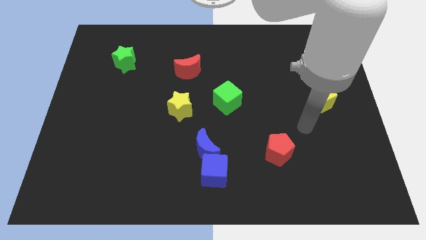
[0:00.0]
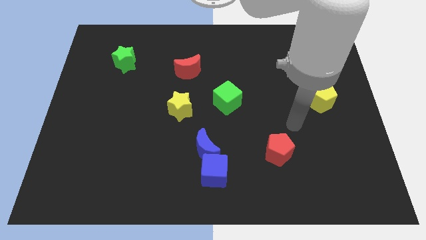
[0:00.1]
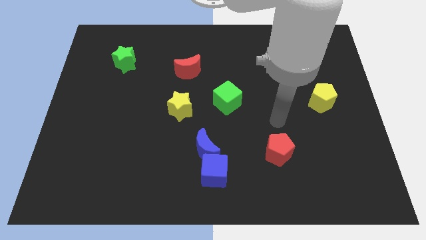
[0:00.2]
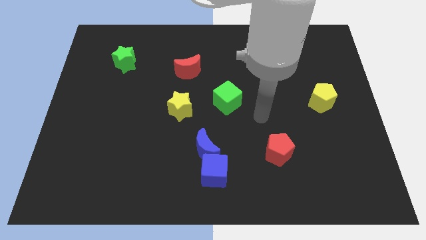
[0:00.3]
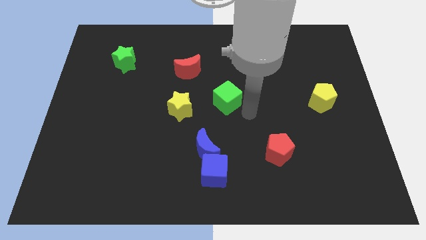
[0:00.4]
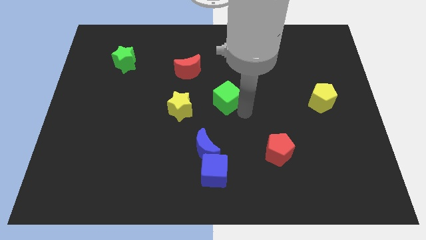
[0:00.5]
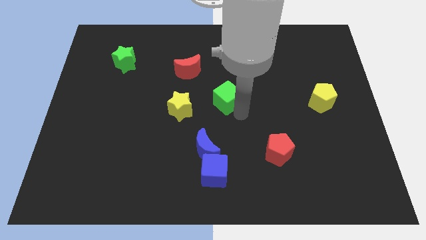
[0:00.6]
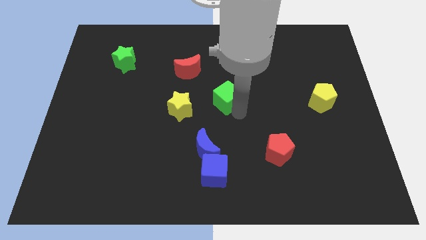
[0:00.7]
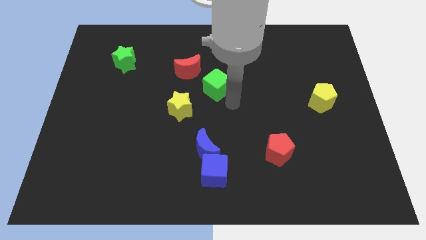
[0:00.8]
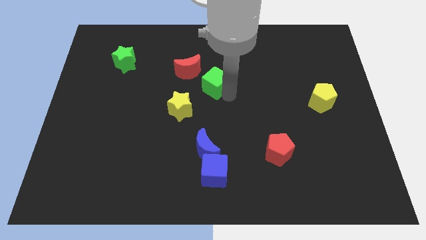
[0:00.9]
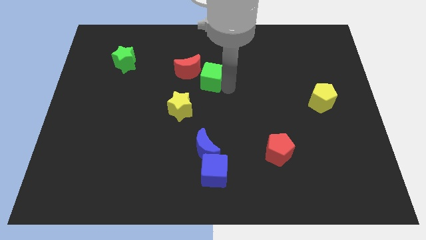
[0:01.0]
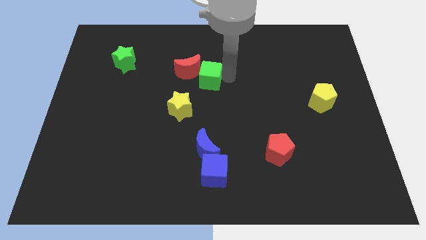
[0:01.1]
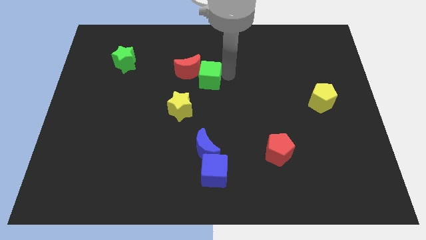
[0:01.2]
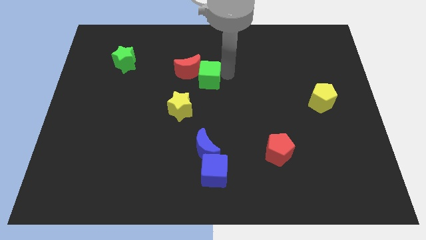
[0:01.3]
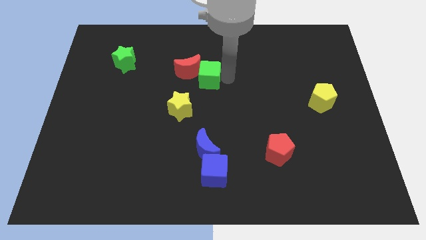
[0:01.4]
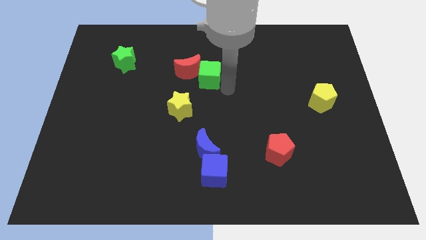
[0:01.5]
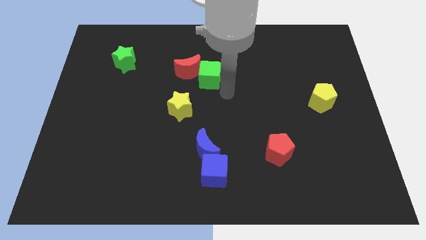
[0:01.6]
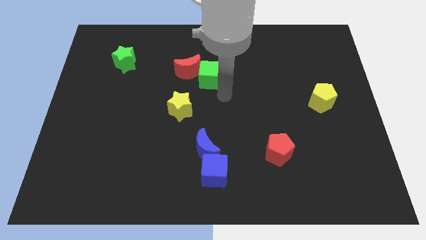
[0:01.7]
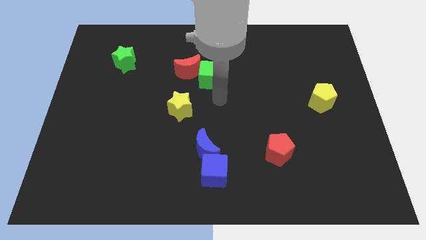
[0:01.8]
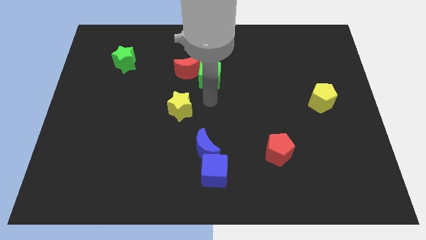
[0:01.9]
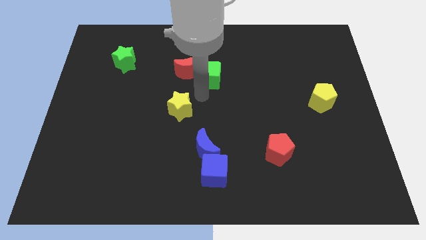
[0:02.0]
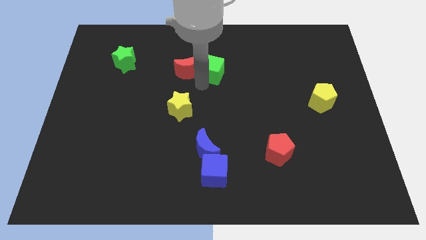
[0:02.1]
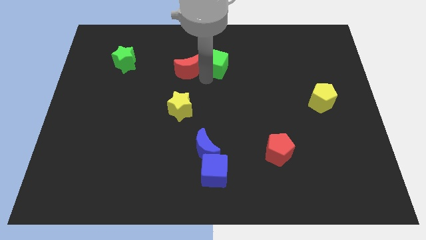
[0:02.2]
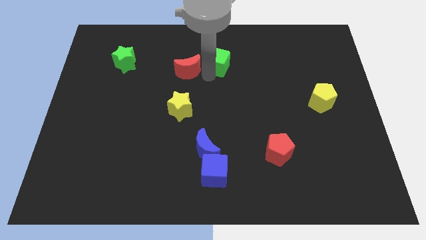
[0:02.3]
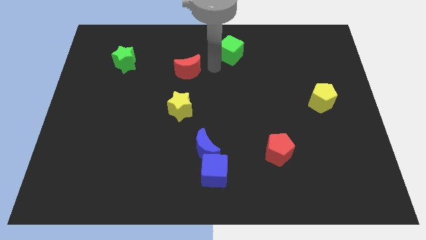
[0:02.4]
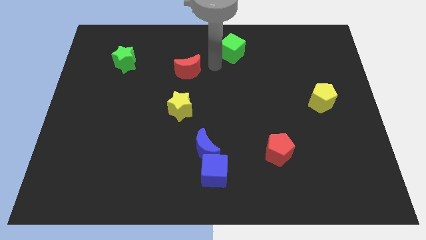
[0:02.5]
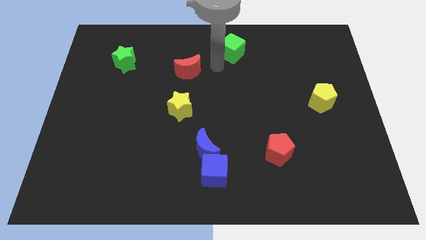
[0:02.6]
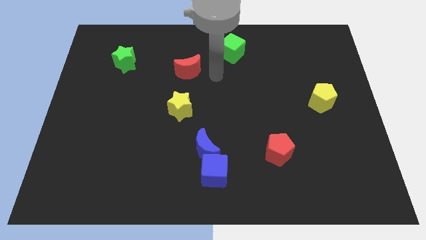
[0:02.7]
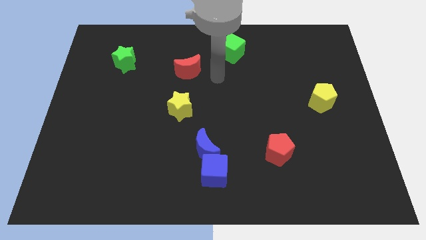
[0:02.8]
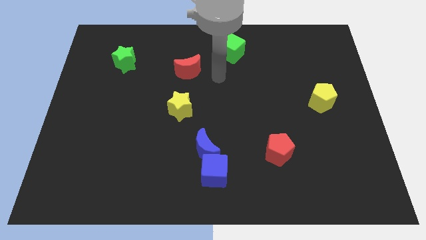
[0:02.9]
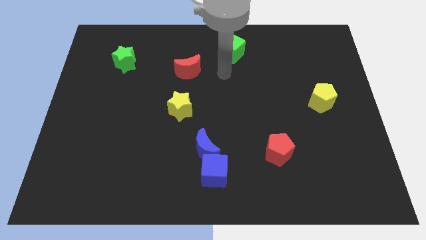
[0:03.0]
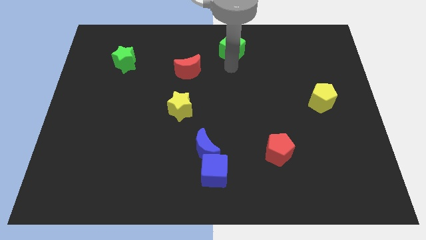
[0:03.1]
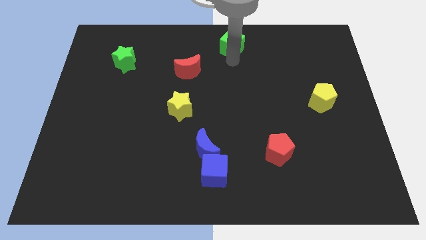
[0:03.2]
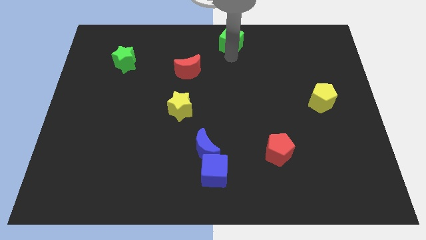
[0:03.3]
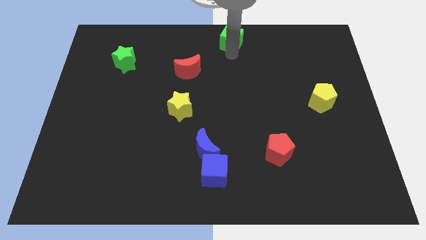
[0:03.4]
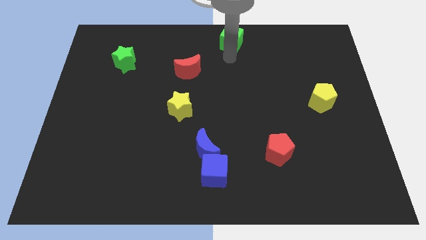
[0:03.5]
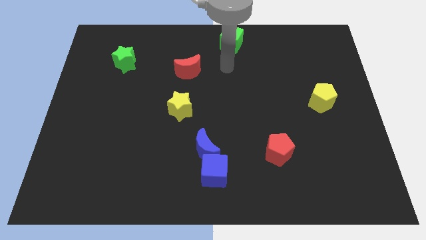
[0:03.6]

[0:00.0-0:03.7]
place the arm to the right of the red moon

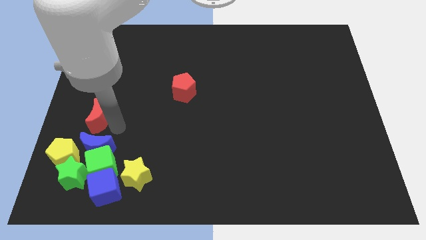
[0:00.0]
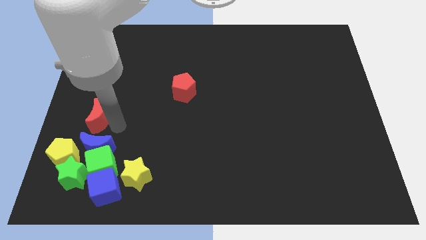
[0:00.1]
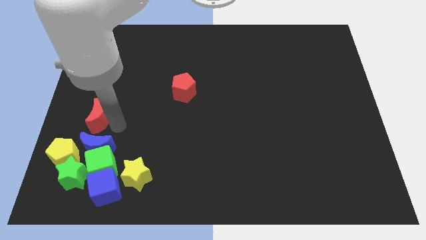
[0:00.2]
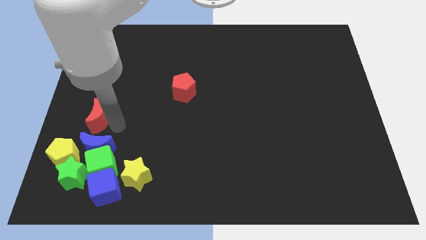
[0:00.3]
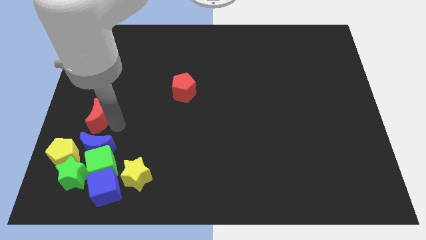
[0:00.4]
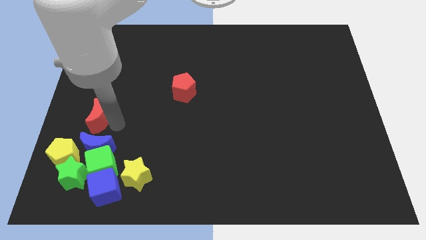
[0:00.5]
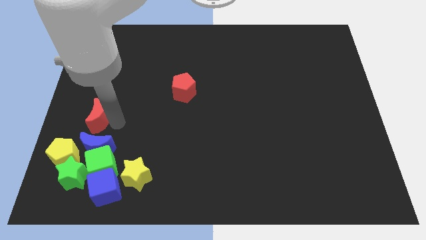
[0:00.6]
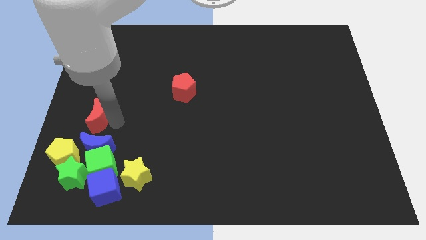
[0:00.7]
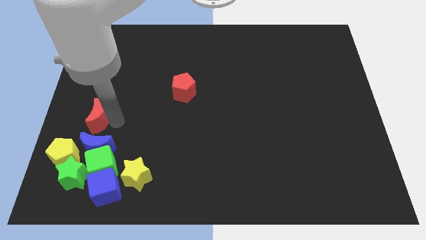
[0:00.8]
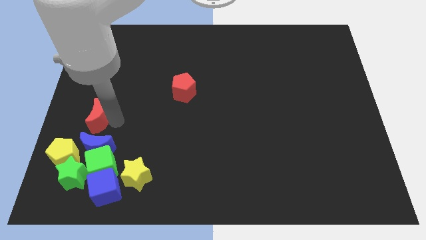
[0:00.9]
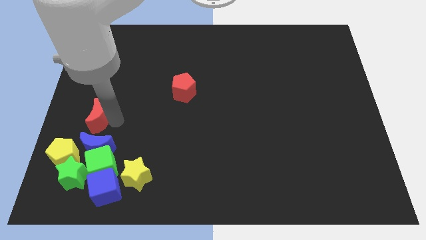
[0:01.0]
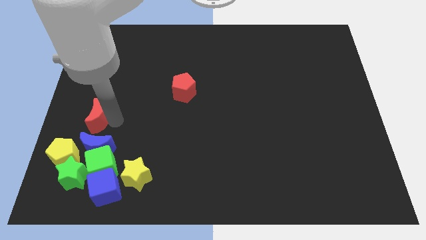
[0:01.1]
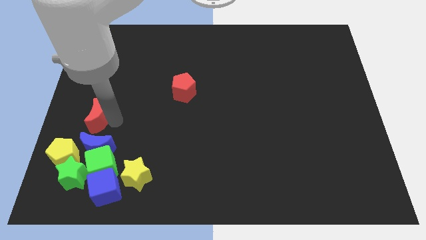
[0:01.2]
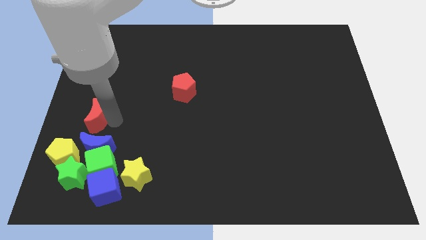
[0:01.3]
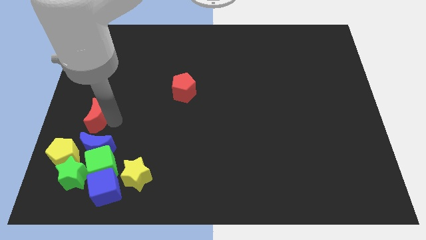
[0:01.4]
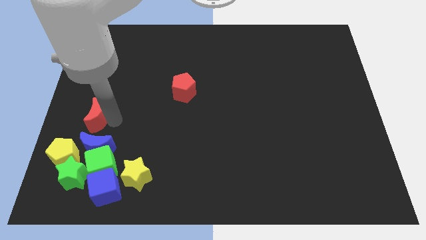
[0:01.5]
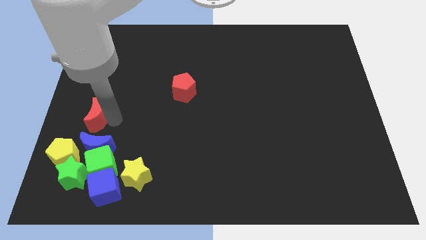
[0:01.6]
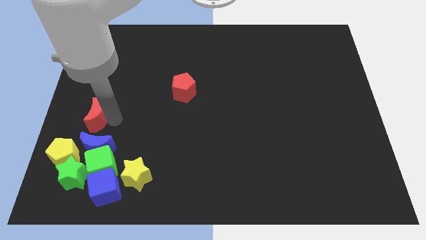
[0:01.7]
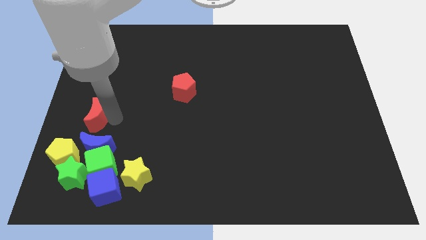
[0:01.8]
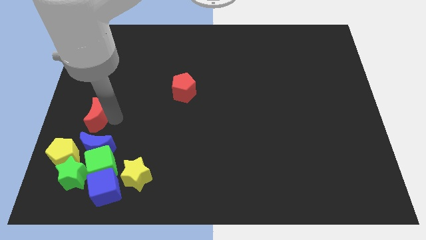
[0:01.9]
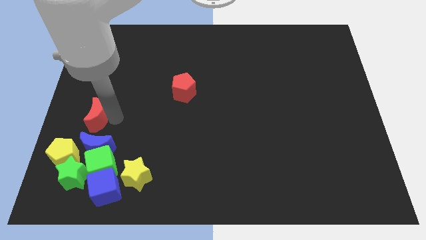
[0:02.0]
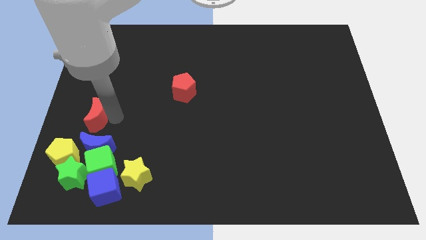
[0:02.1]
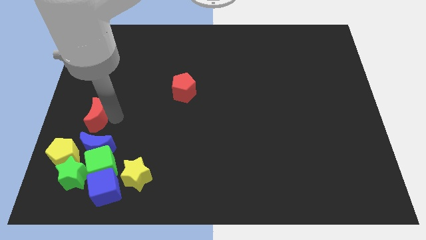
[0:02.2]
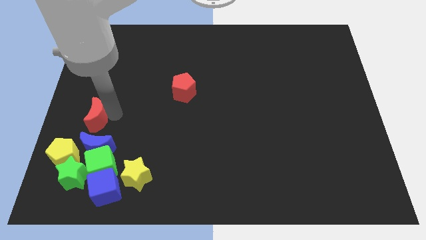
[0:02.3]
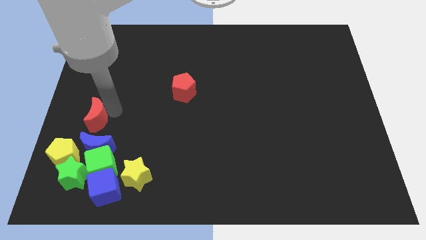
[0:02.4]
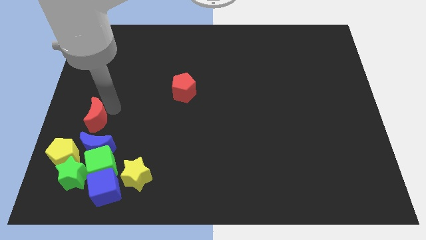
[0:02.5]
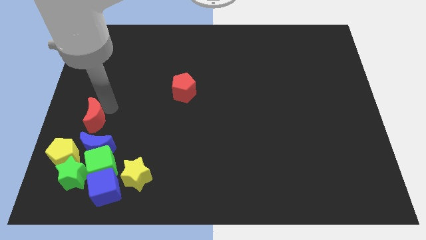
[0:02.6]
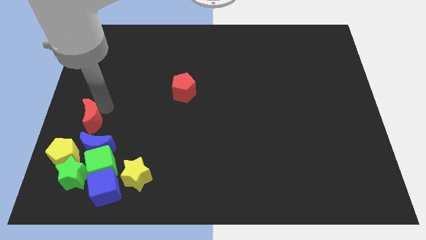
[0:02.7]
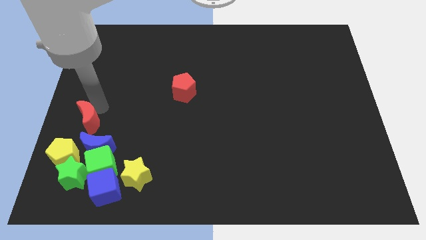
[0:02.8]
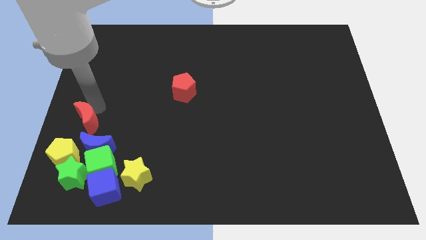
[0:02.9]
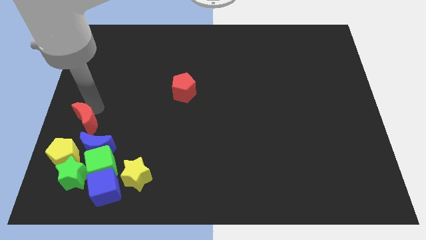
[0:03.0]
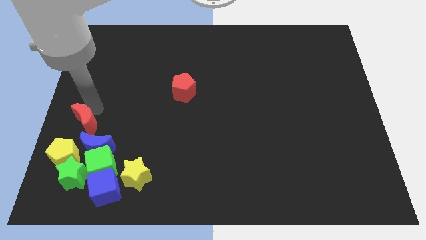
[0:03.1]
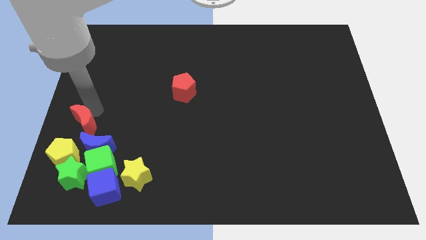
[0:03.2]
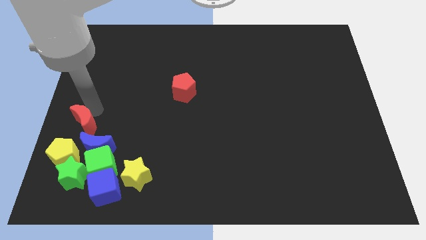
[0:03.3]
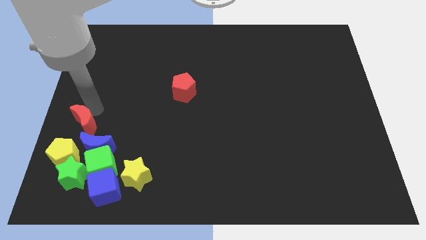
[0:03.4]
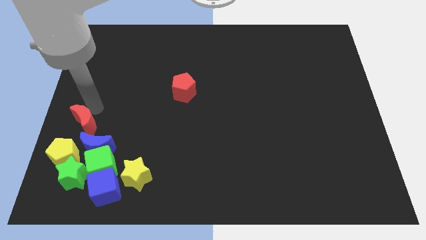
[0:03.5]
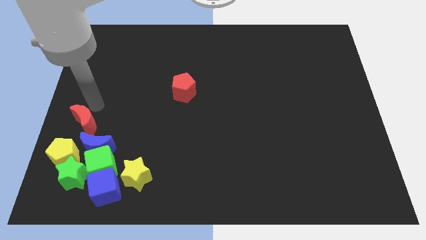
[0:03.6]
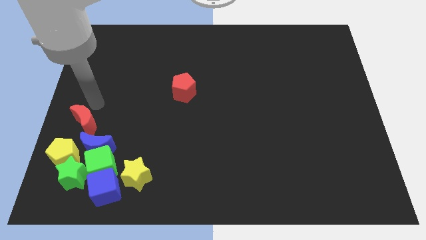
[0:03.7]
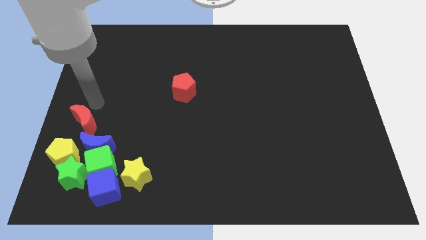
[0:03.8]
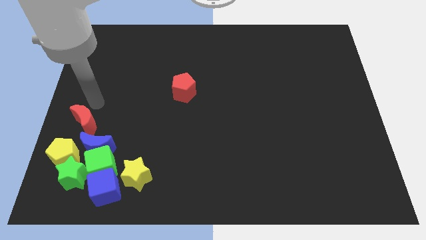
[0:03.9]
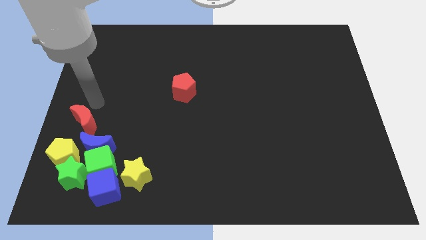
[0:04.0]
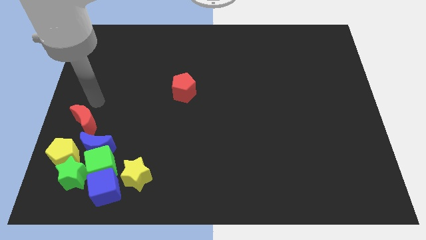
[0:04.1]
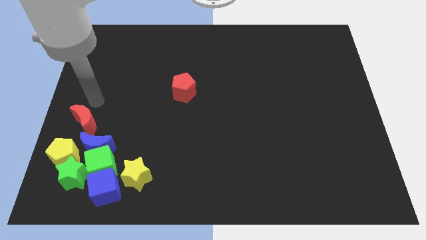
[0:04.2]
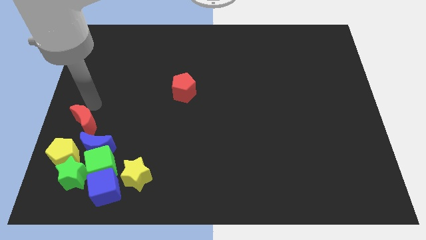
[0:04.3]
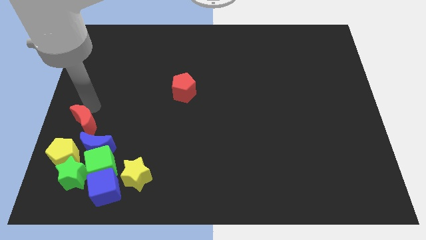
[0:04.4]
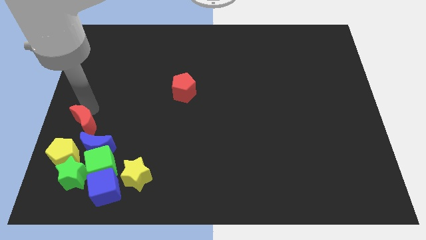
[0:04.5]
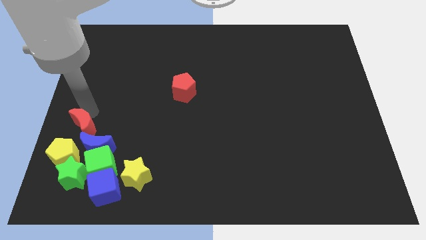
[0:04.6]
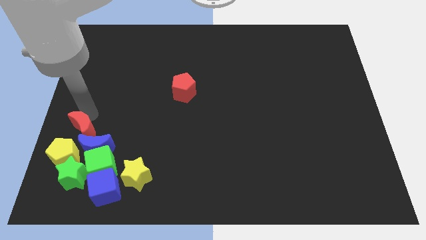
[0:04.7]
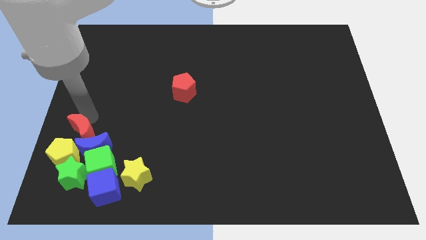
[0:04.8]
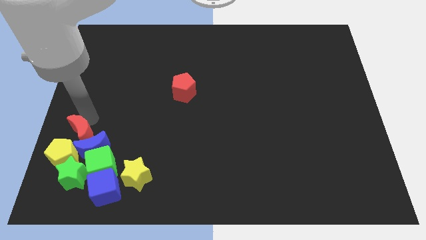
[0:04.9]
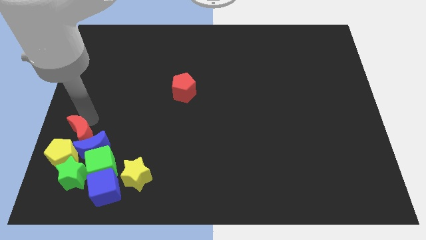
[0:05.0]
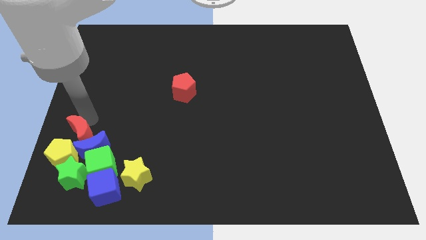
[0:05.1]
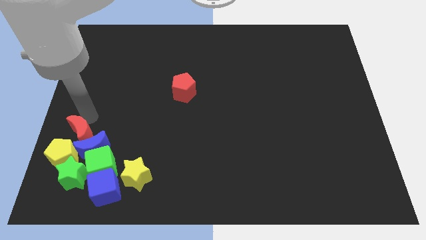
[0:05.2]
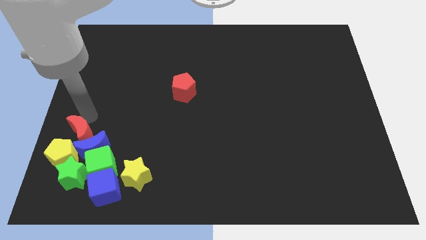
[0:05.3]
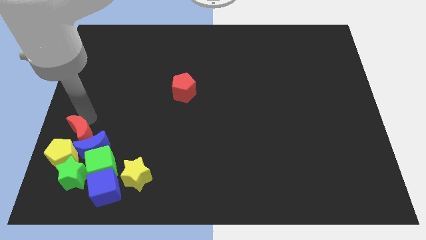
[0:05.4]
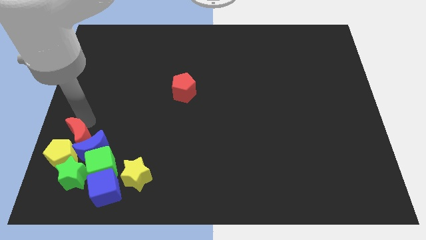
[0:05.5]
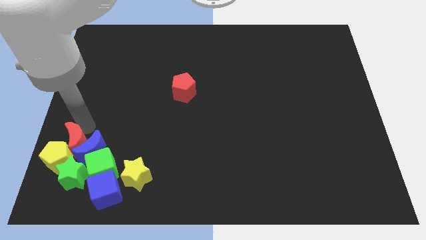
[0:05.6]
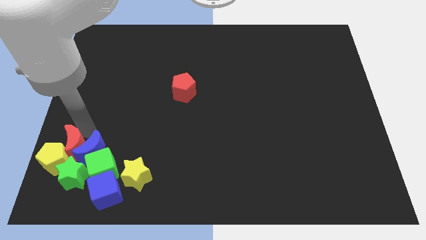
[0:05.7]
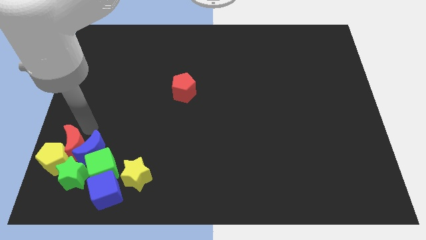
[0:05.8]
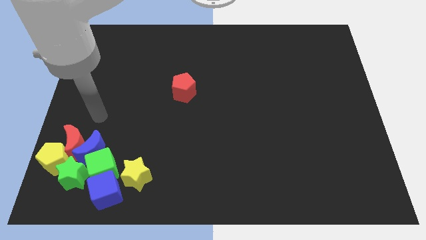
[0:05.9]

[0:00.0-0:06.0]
push the red crescent into the blue crescent and yellow pentagon
